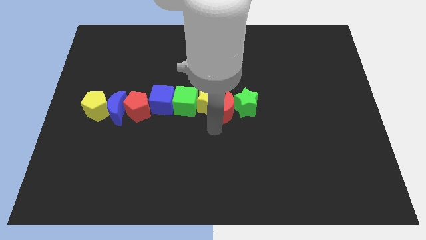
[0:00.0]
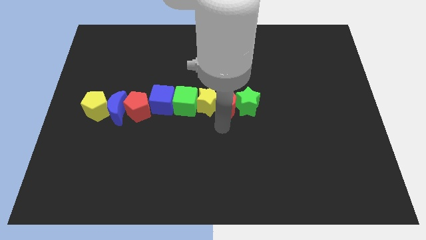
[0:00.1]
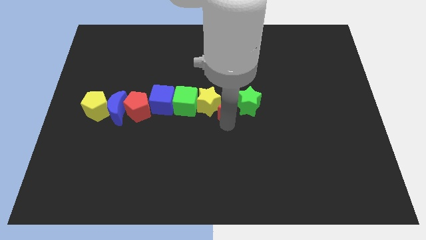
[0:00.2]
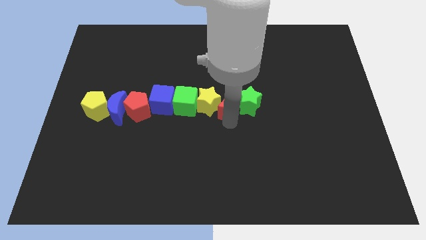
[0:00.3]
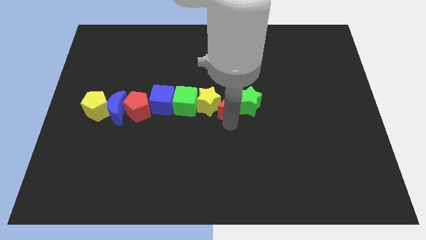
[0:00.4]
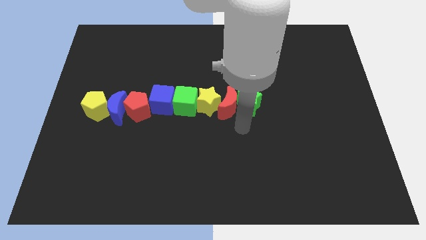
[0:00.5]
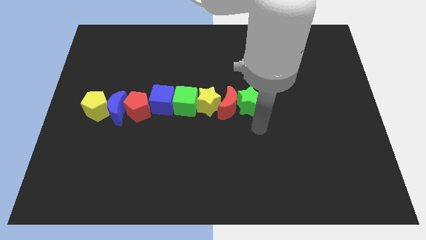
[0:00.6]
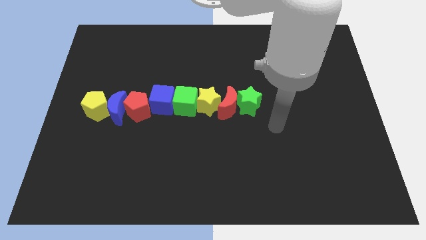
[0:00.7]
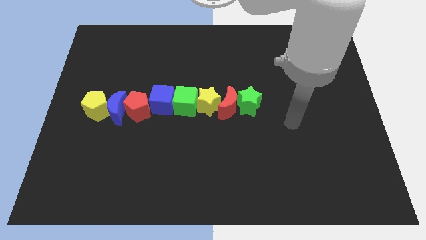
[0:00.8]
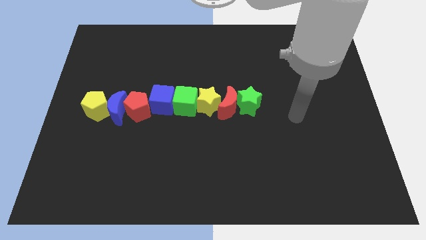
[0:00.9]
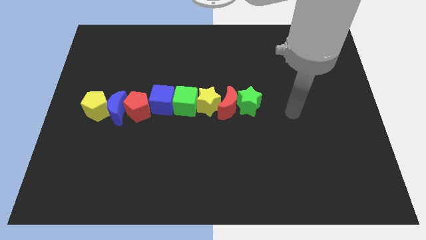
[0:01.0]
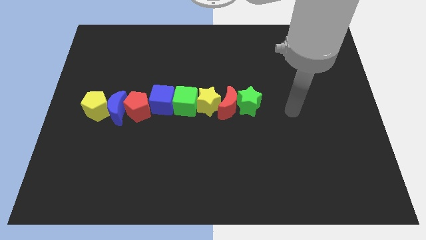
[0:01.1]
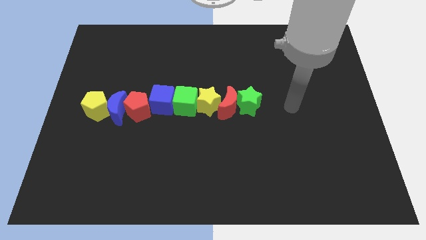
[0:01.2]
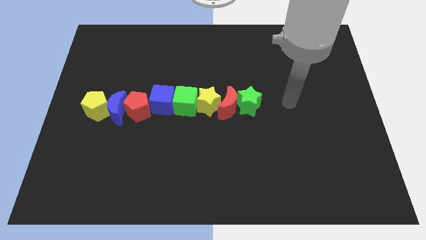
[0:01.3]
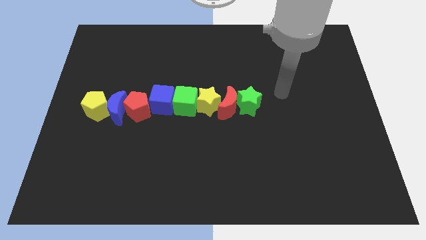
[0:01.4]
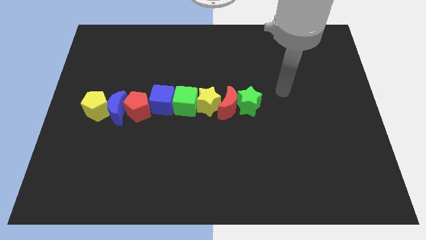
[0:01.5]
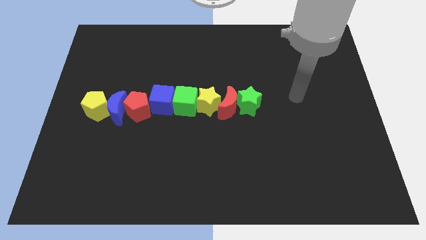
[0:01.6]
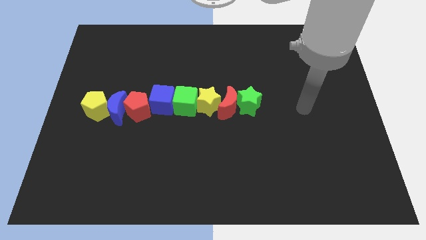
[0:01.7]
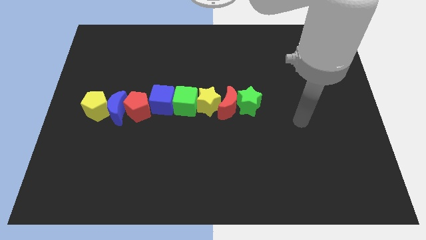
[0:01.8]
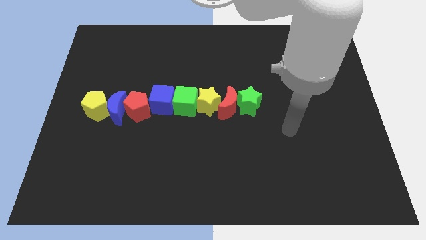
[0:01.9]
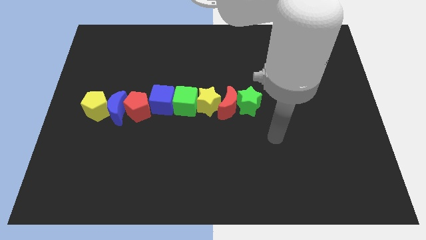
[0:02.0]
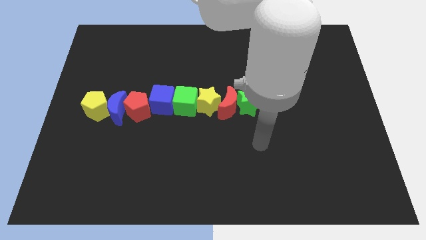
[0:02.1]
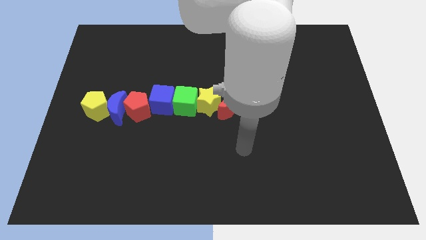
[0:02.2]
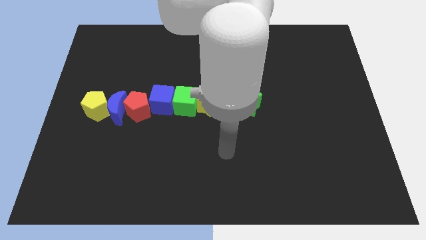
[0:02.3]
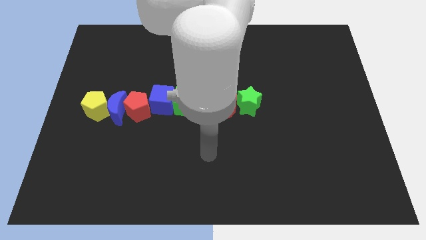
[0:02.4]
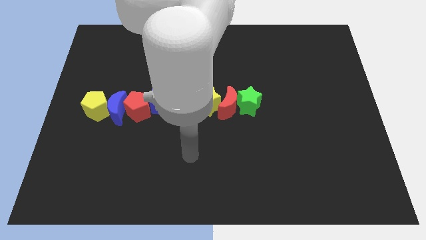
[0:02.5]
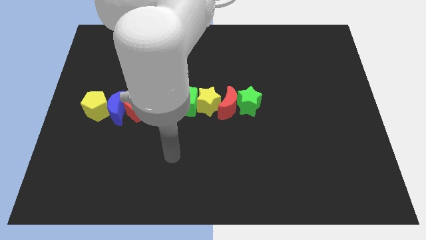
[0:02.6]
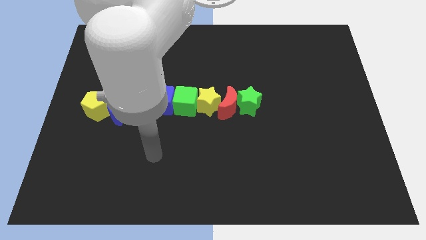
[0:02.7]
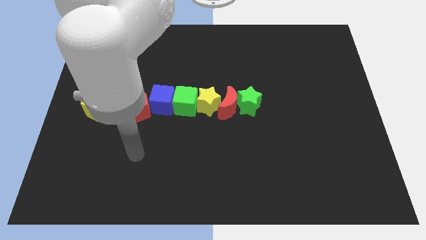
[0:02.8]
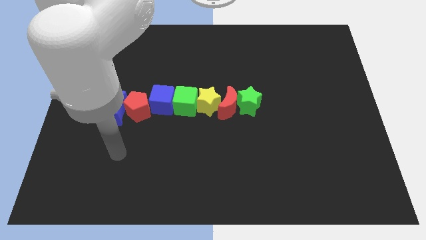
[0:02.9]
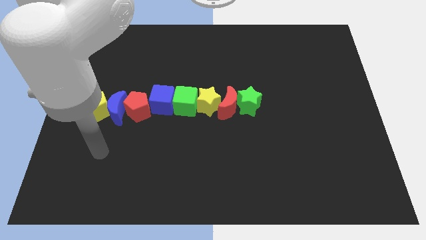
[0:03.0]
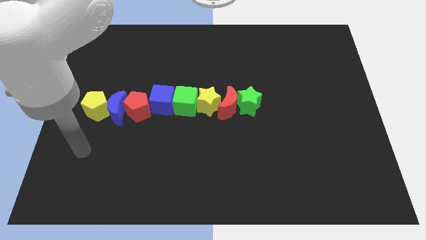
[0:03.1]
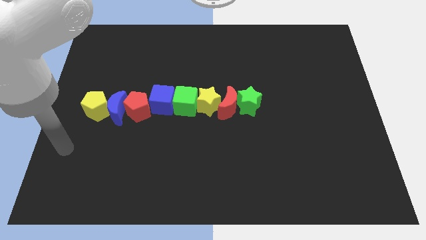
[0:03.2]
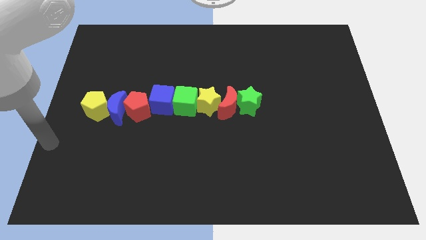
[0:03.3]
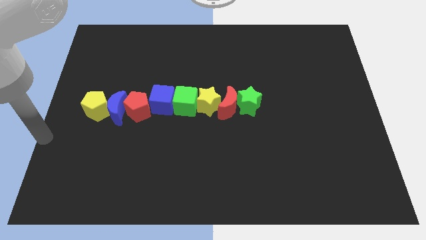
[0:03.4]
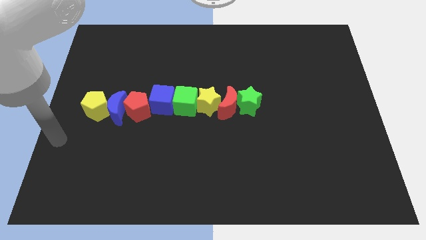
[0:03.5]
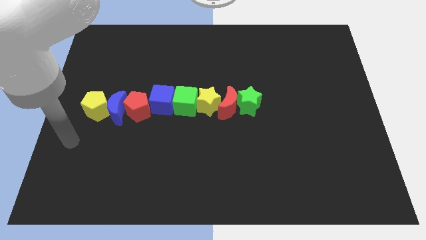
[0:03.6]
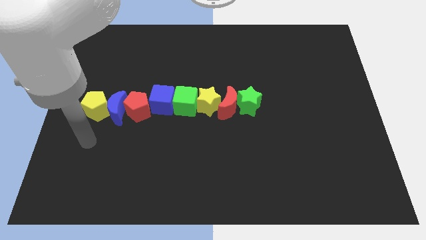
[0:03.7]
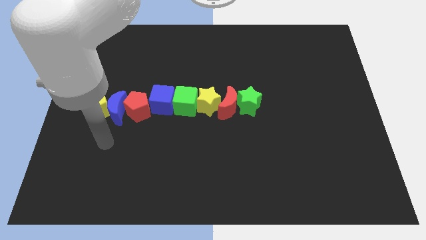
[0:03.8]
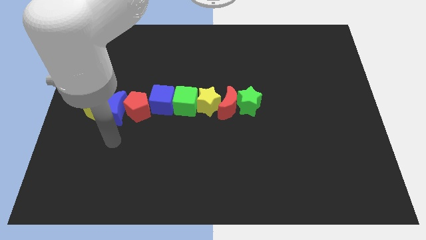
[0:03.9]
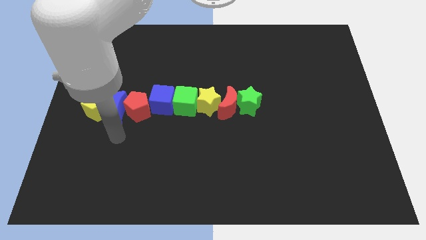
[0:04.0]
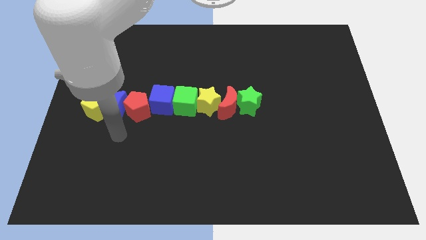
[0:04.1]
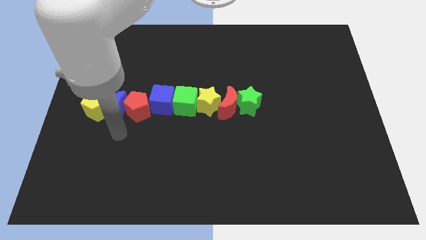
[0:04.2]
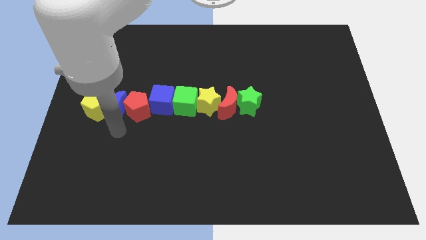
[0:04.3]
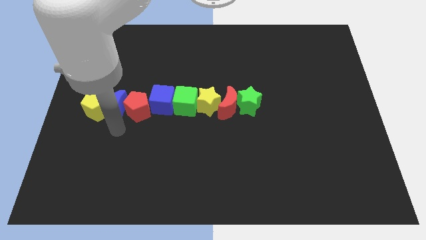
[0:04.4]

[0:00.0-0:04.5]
touch the bottom of the blue crescent

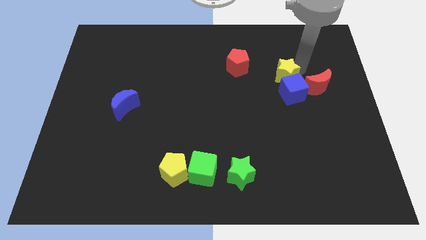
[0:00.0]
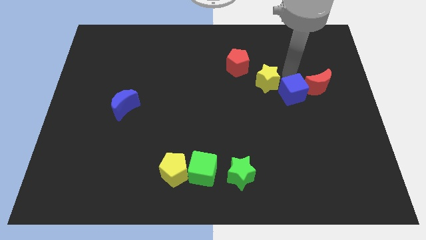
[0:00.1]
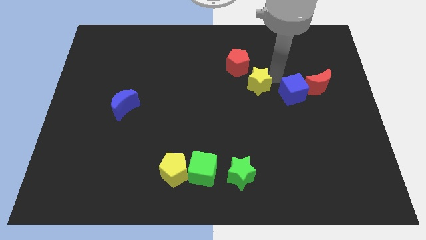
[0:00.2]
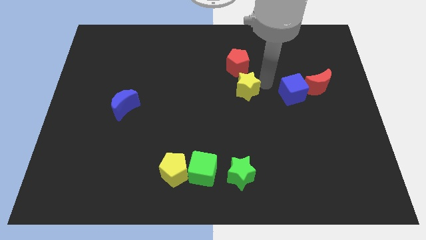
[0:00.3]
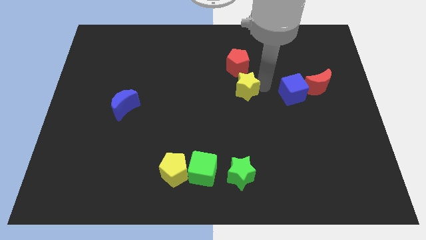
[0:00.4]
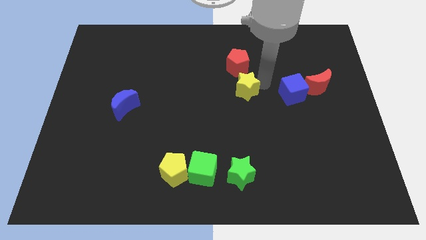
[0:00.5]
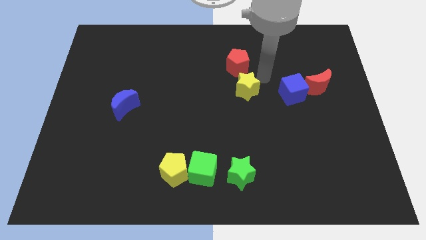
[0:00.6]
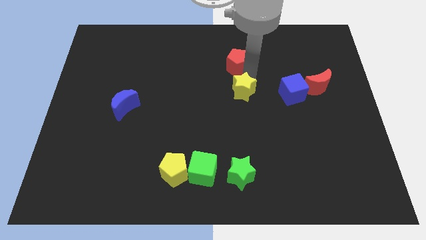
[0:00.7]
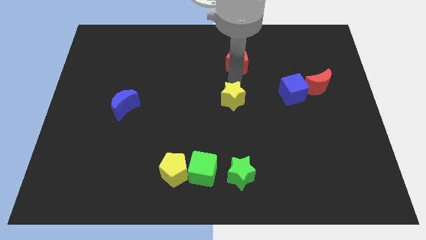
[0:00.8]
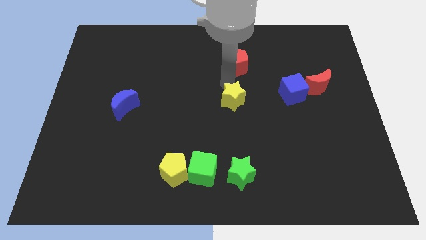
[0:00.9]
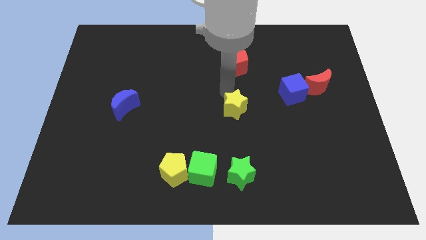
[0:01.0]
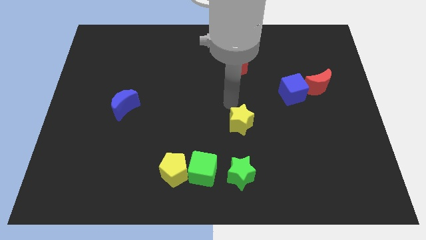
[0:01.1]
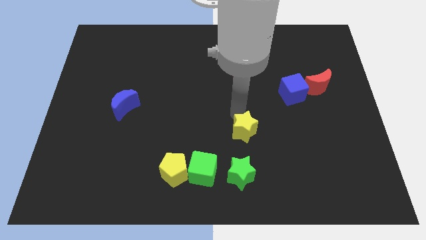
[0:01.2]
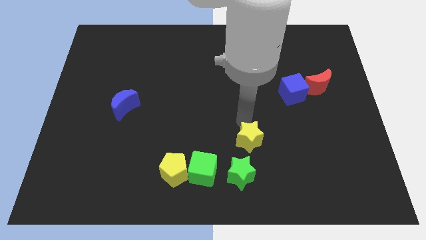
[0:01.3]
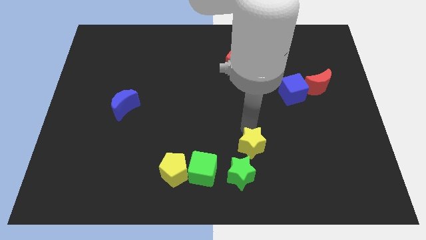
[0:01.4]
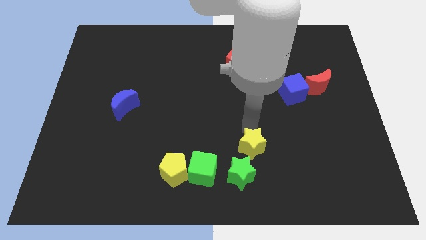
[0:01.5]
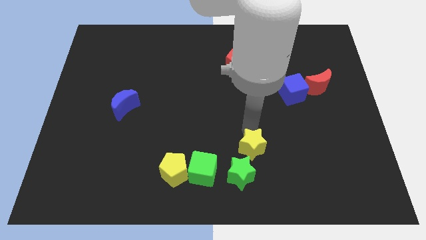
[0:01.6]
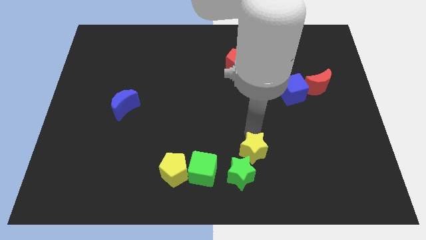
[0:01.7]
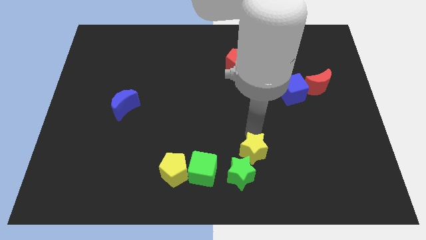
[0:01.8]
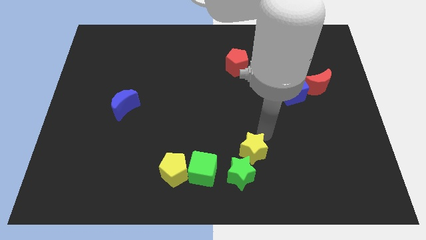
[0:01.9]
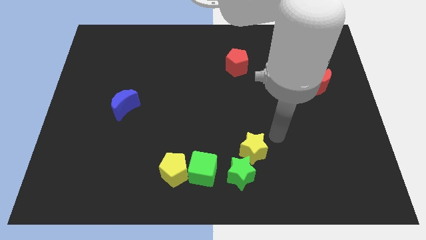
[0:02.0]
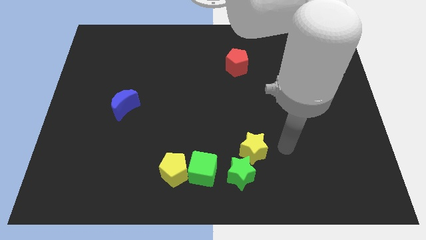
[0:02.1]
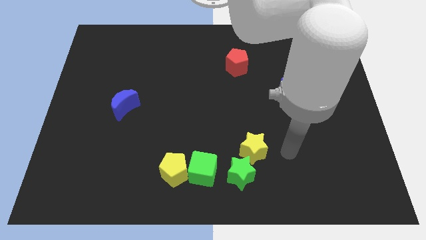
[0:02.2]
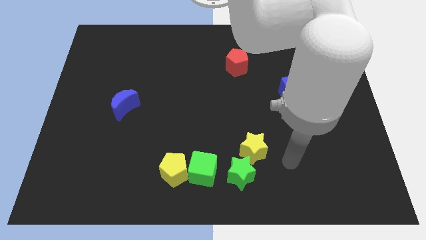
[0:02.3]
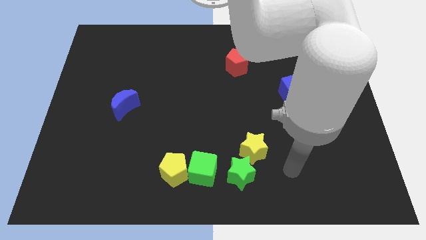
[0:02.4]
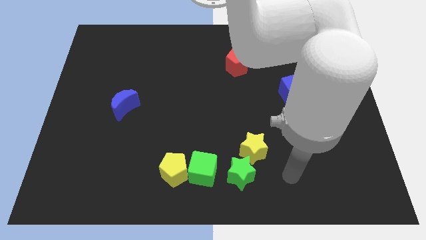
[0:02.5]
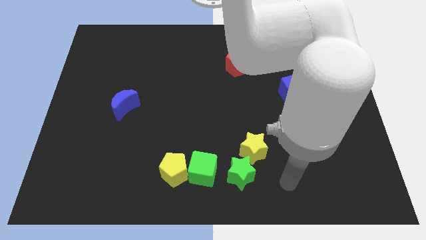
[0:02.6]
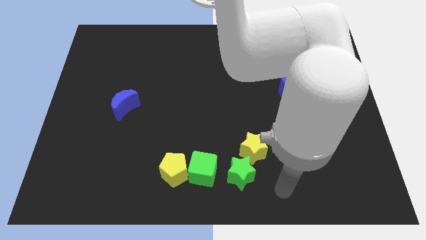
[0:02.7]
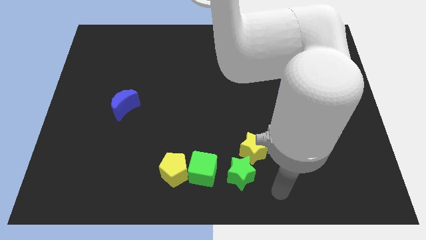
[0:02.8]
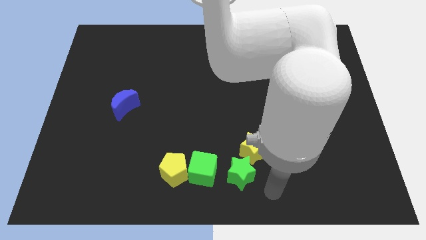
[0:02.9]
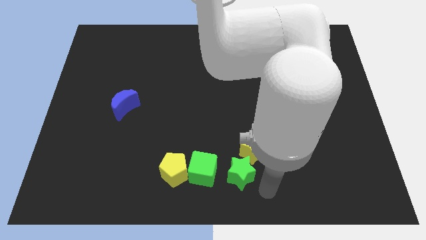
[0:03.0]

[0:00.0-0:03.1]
place the yellow star above the green star

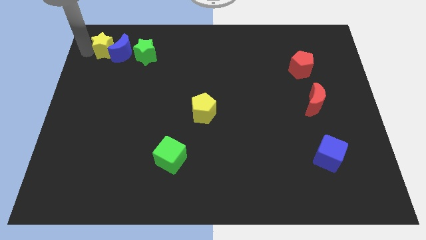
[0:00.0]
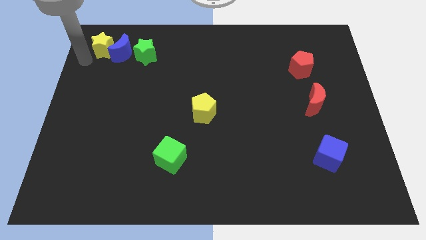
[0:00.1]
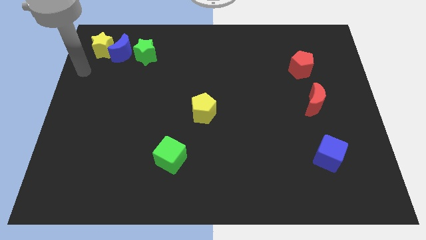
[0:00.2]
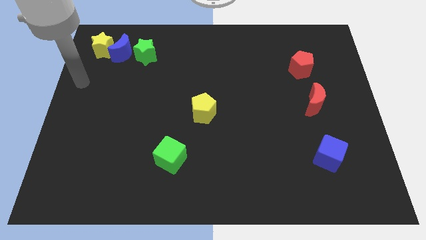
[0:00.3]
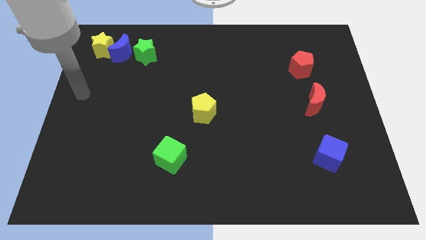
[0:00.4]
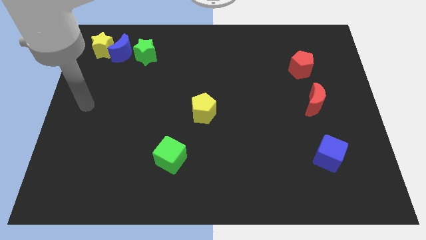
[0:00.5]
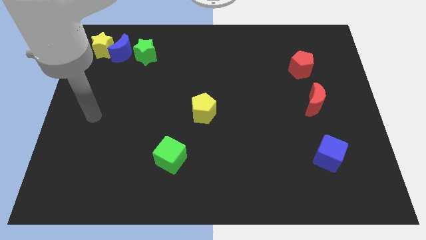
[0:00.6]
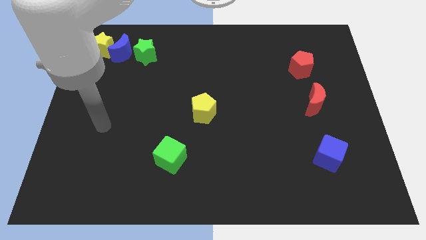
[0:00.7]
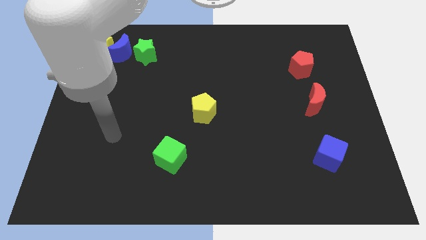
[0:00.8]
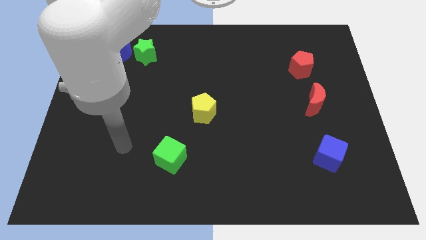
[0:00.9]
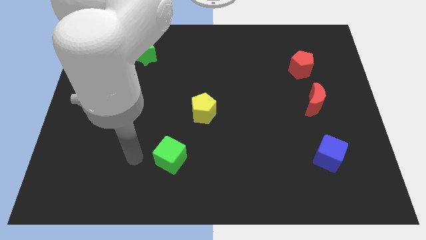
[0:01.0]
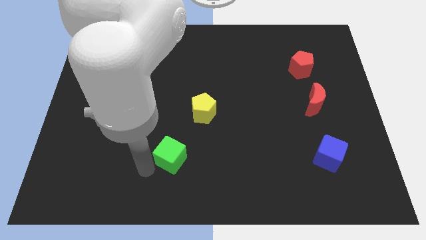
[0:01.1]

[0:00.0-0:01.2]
place your arm at the left of the green cube
